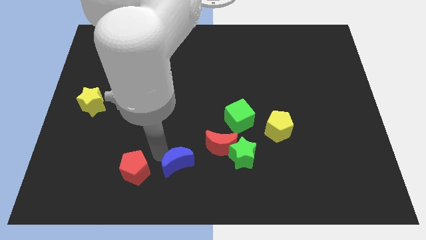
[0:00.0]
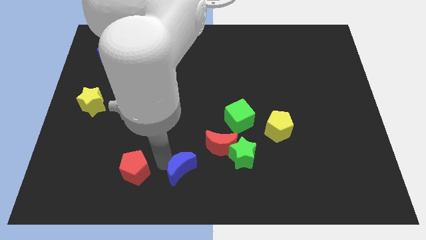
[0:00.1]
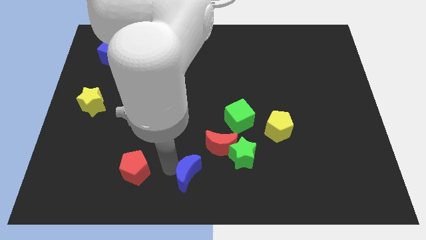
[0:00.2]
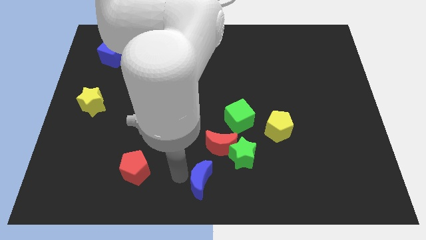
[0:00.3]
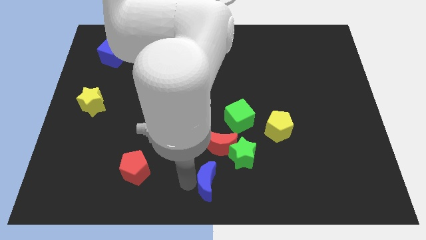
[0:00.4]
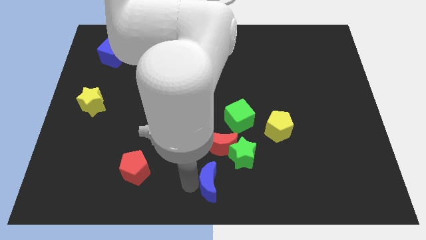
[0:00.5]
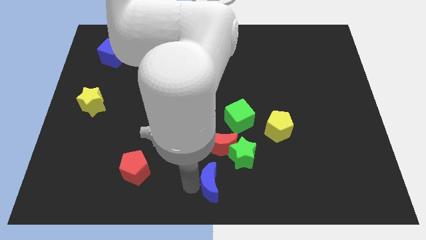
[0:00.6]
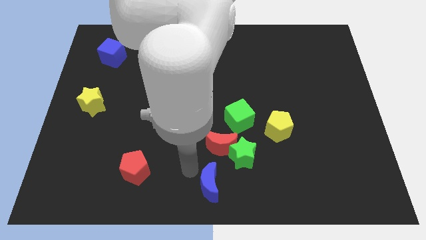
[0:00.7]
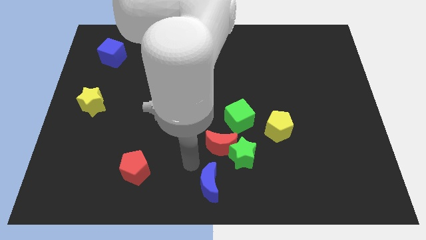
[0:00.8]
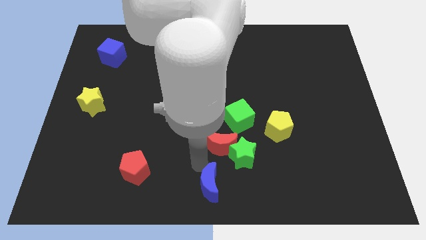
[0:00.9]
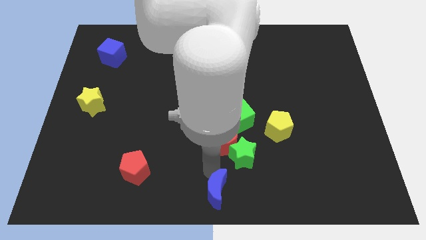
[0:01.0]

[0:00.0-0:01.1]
move blue moon to the bottom center

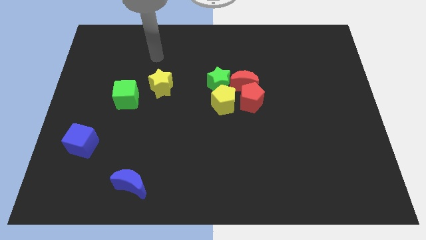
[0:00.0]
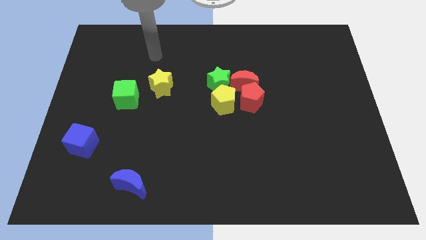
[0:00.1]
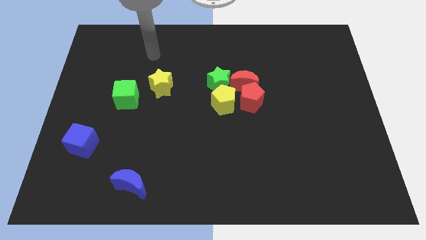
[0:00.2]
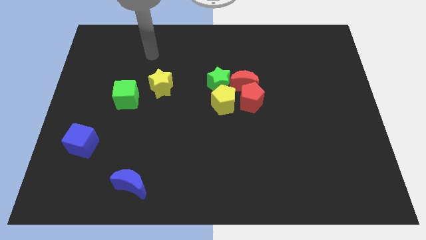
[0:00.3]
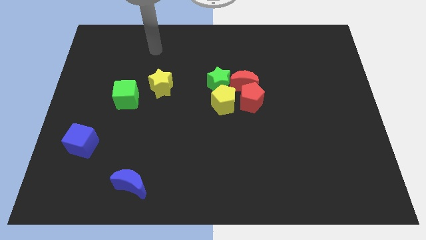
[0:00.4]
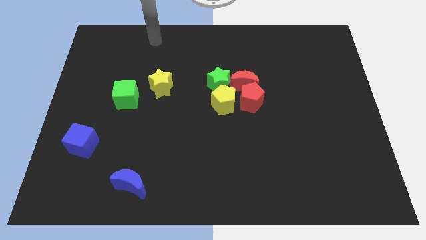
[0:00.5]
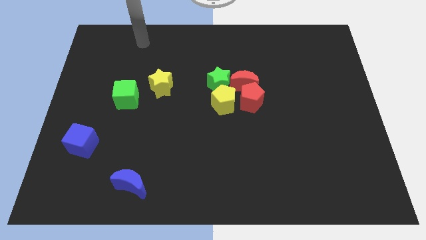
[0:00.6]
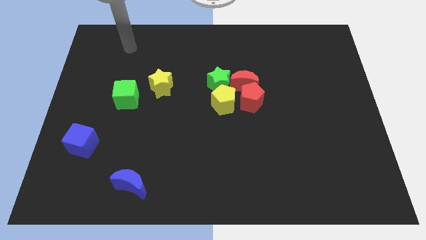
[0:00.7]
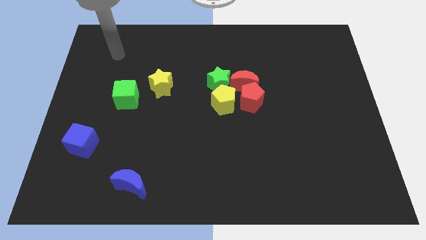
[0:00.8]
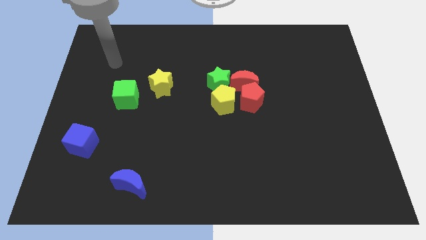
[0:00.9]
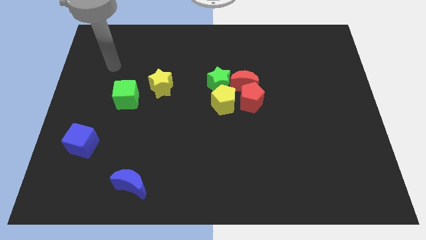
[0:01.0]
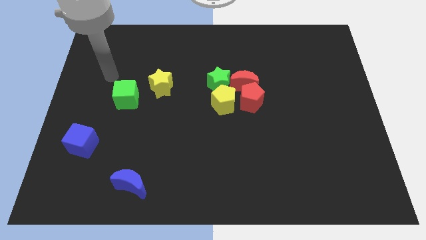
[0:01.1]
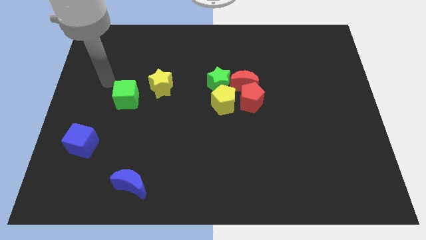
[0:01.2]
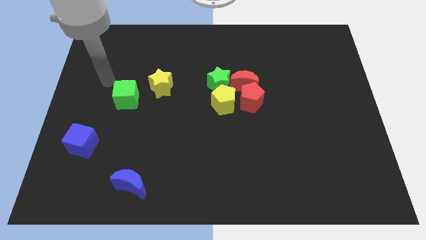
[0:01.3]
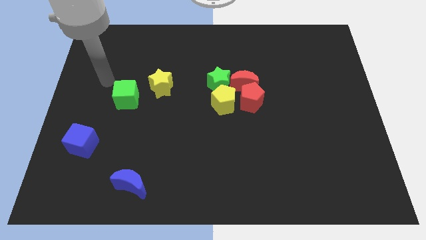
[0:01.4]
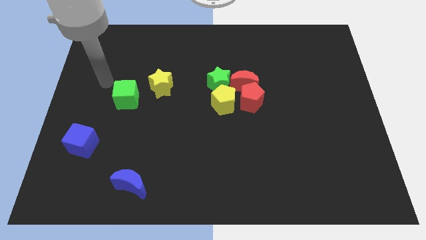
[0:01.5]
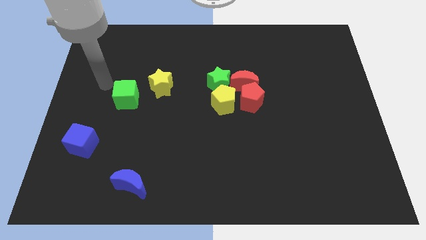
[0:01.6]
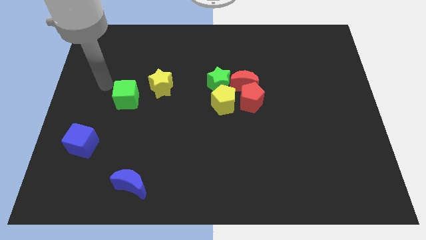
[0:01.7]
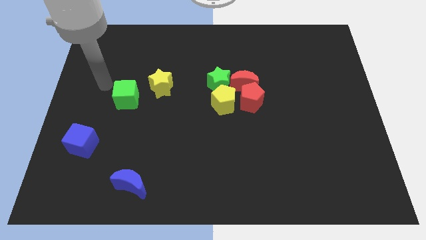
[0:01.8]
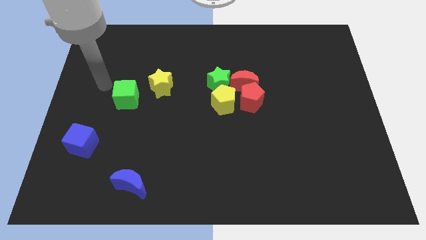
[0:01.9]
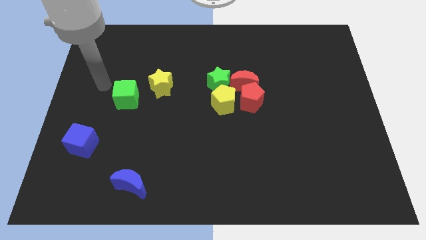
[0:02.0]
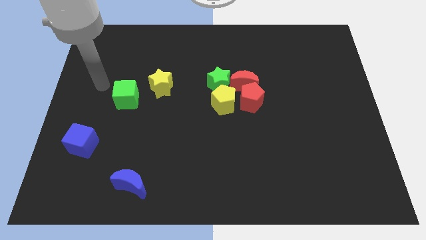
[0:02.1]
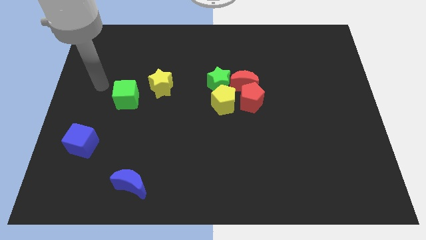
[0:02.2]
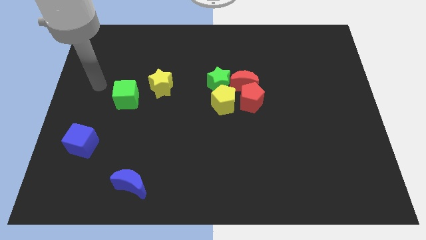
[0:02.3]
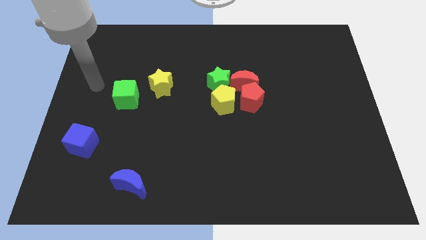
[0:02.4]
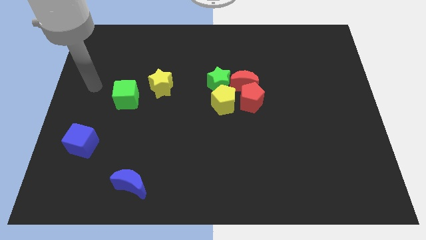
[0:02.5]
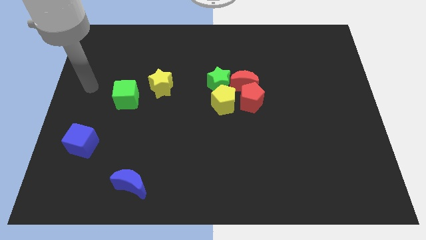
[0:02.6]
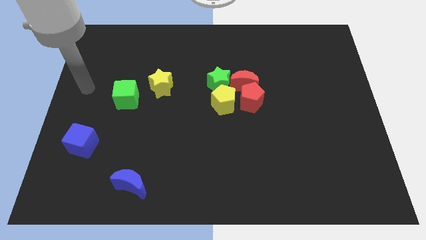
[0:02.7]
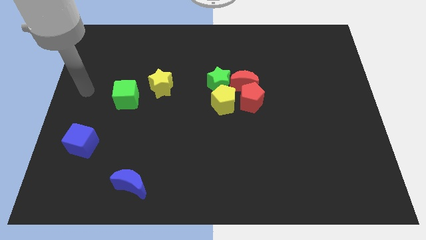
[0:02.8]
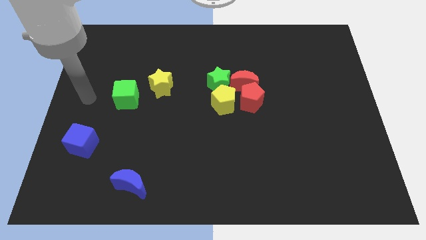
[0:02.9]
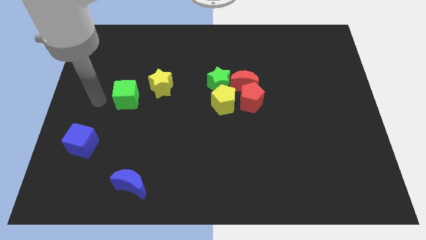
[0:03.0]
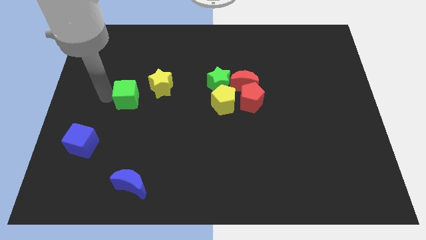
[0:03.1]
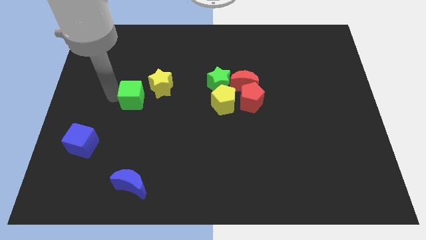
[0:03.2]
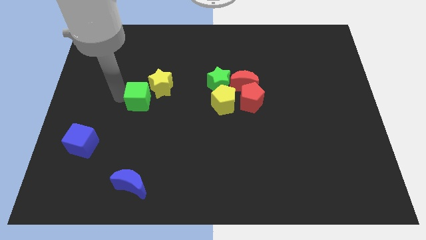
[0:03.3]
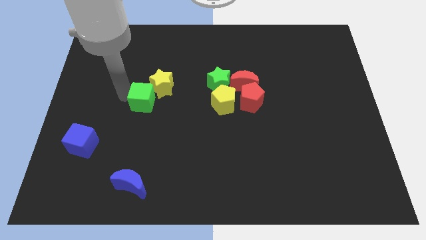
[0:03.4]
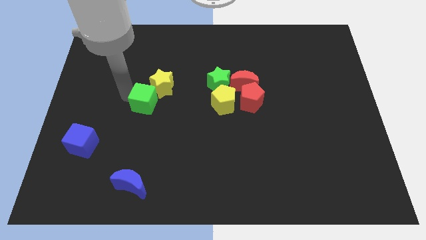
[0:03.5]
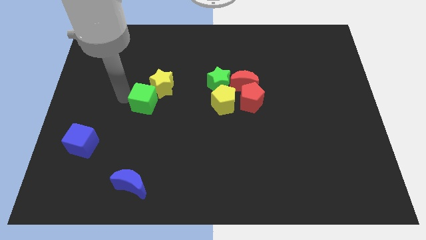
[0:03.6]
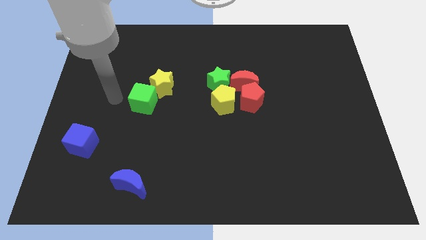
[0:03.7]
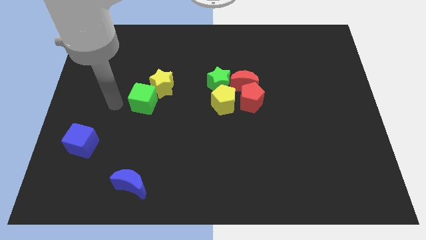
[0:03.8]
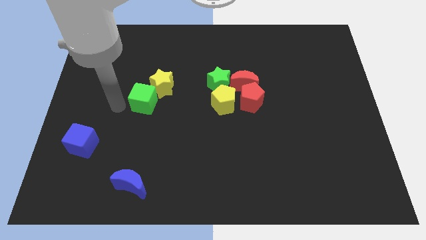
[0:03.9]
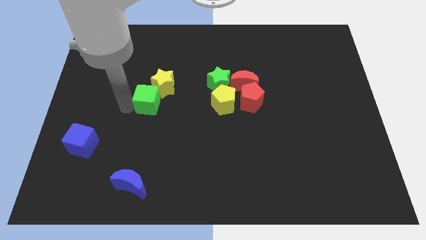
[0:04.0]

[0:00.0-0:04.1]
push the green cube into the bottom side of the yellow star

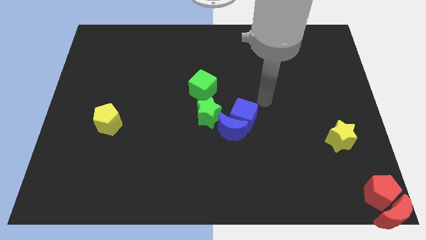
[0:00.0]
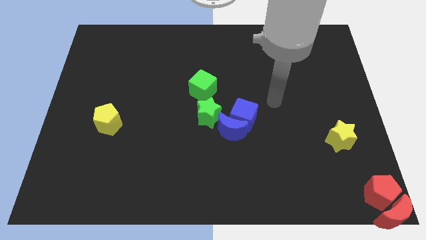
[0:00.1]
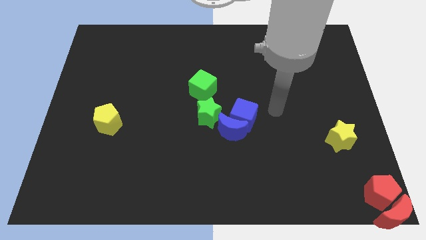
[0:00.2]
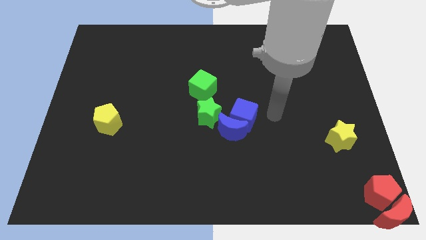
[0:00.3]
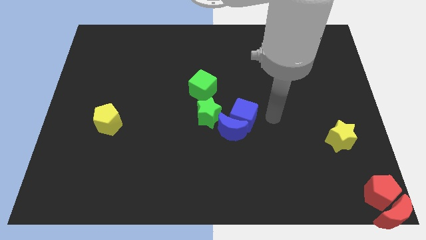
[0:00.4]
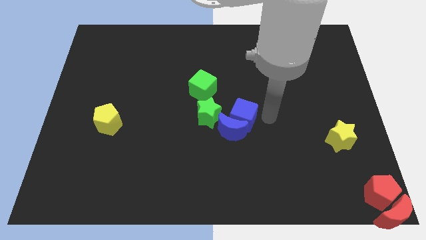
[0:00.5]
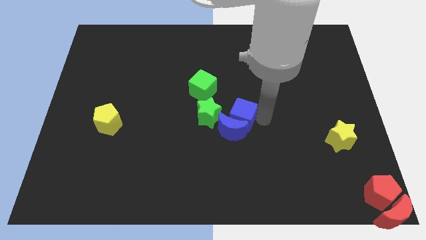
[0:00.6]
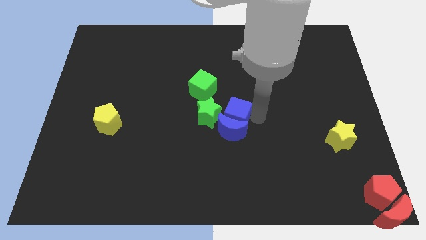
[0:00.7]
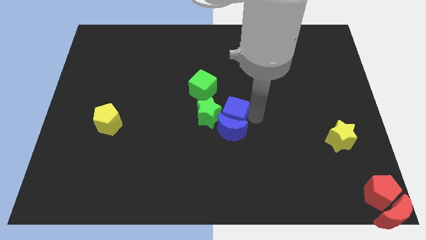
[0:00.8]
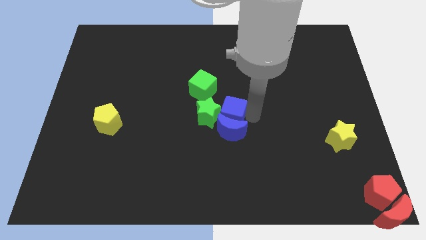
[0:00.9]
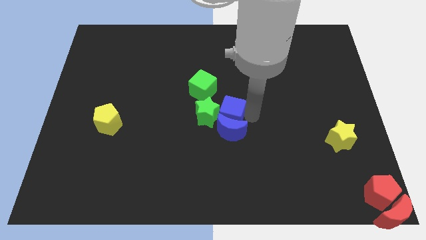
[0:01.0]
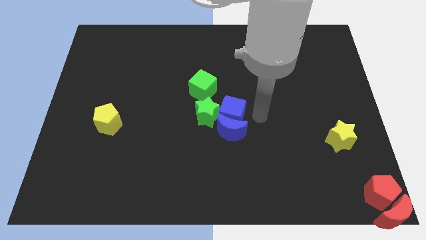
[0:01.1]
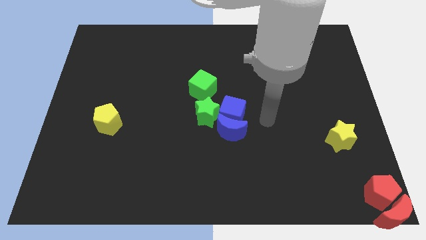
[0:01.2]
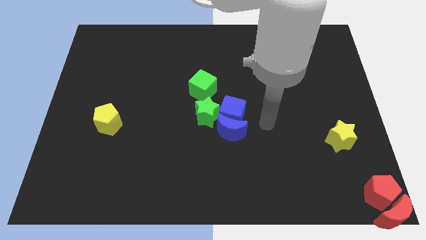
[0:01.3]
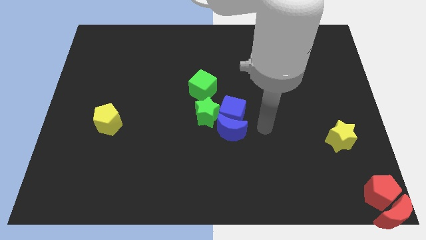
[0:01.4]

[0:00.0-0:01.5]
push the blue cube into the green star

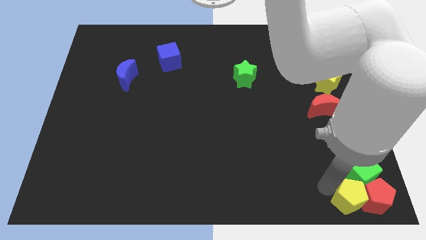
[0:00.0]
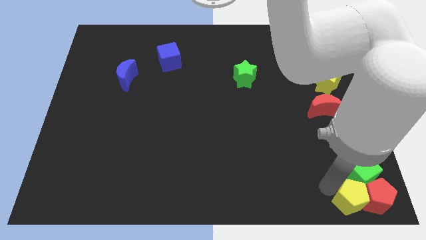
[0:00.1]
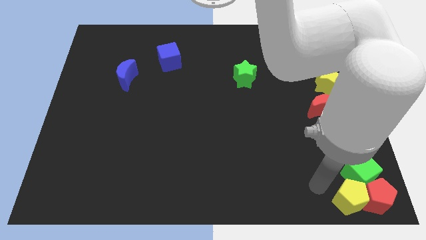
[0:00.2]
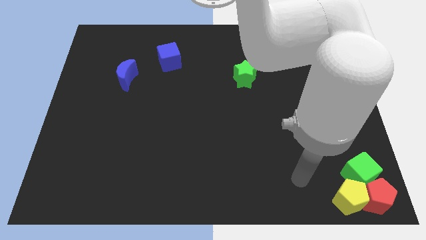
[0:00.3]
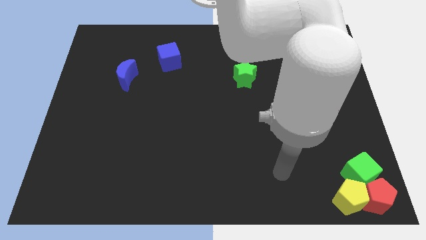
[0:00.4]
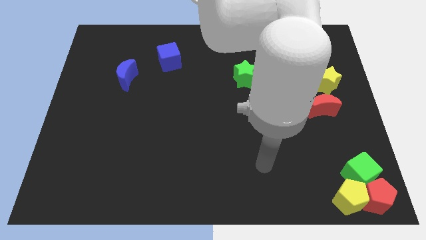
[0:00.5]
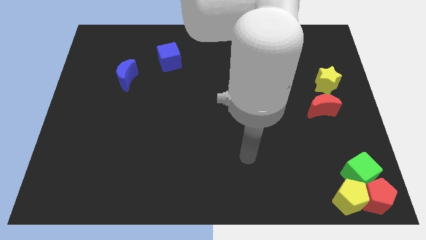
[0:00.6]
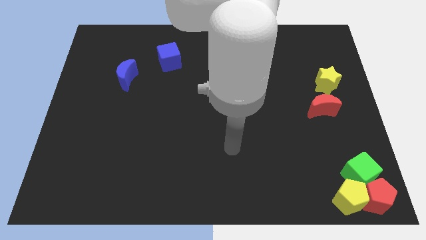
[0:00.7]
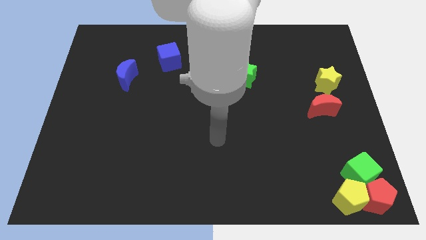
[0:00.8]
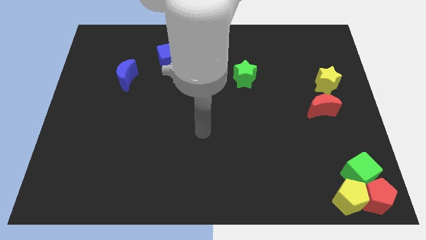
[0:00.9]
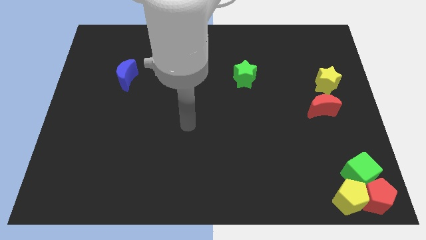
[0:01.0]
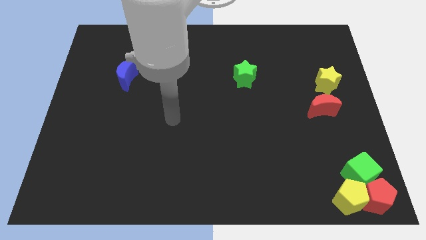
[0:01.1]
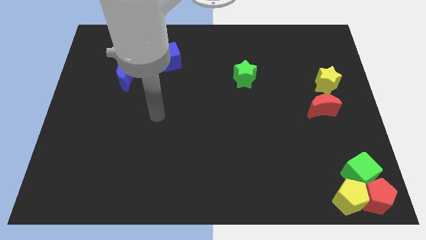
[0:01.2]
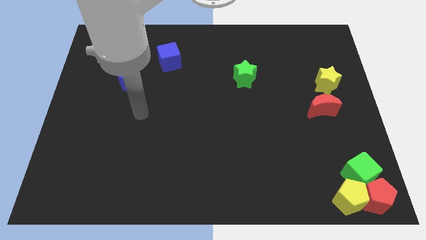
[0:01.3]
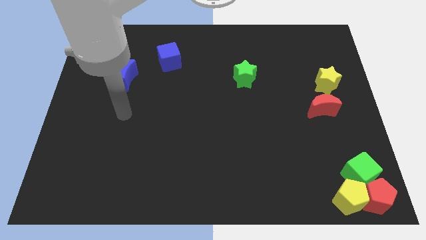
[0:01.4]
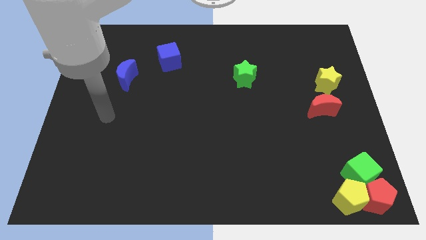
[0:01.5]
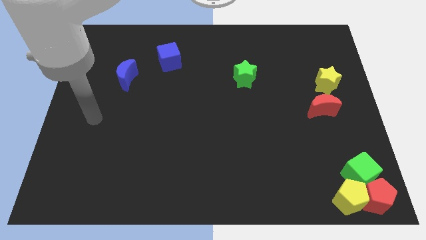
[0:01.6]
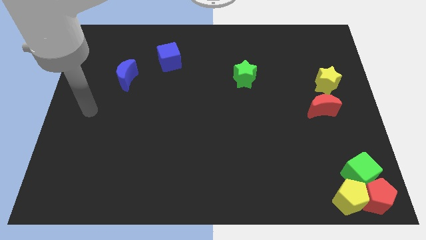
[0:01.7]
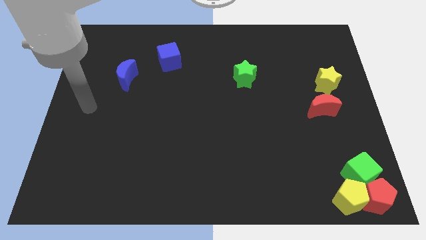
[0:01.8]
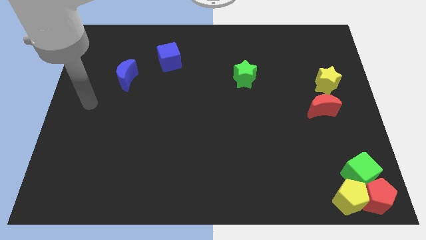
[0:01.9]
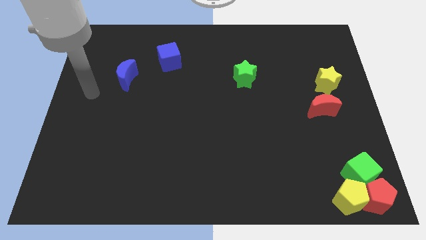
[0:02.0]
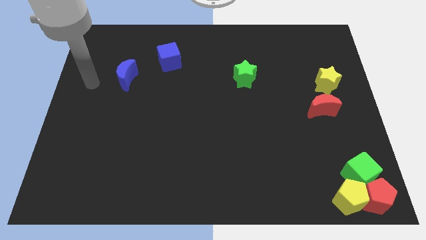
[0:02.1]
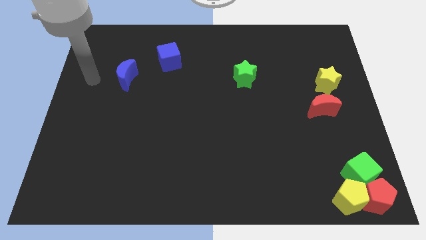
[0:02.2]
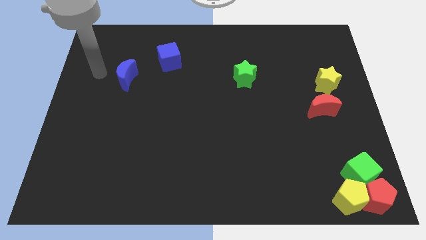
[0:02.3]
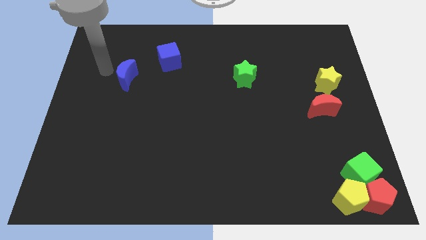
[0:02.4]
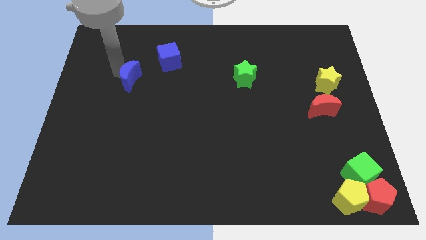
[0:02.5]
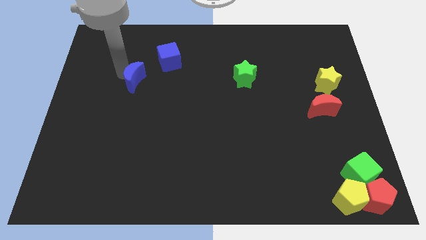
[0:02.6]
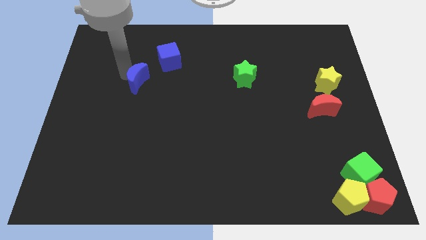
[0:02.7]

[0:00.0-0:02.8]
move your arm away from the yellow pentagon
